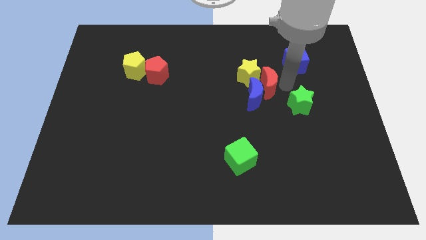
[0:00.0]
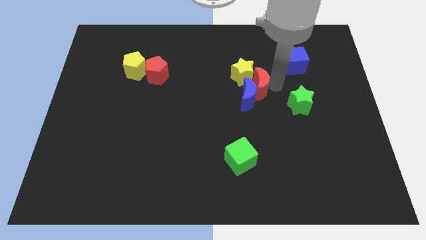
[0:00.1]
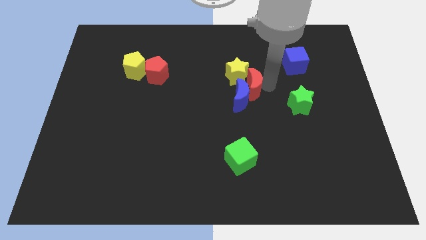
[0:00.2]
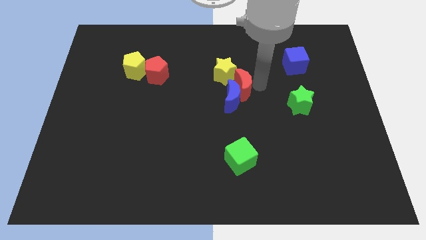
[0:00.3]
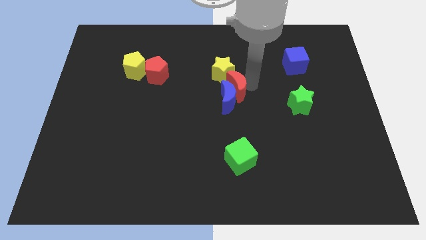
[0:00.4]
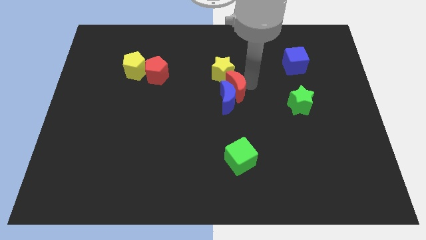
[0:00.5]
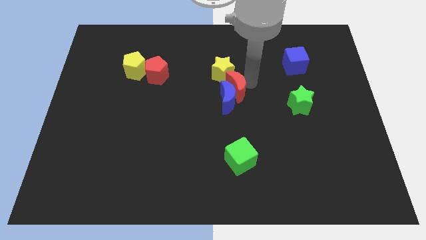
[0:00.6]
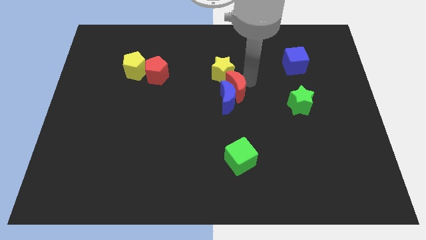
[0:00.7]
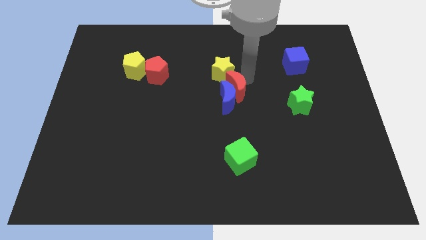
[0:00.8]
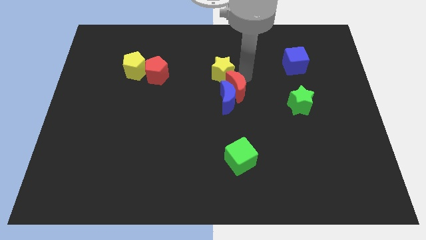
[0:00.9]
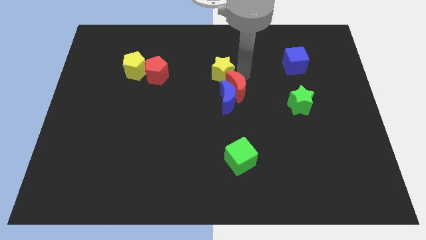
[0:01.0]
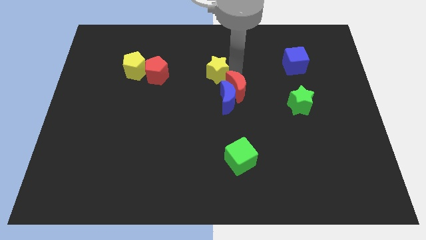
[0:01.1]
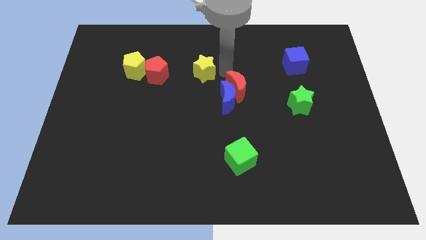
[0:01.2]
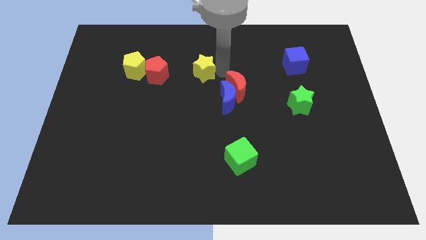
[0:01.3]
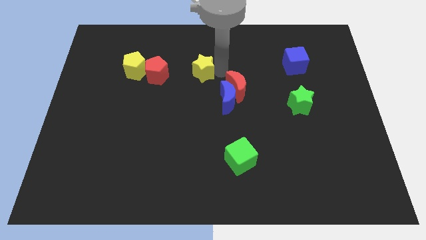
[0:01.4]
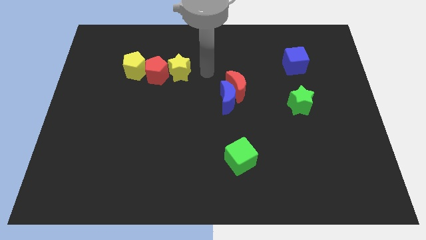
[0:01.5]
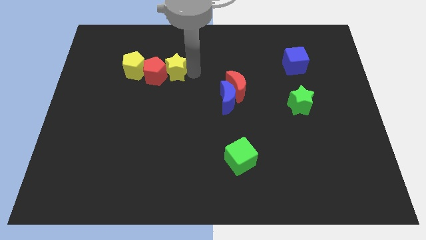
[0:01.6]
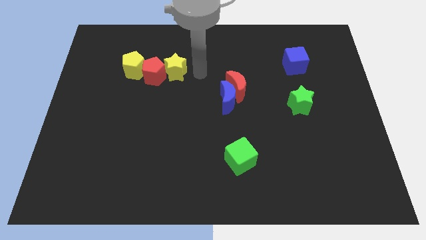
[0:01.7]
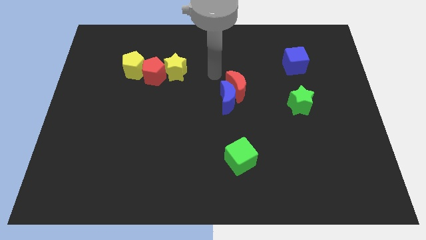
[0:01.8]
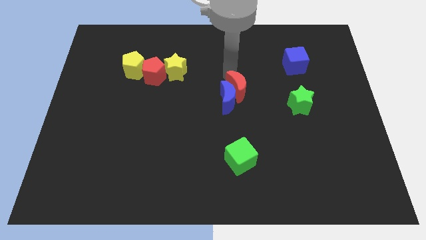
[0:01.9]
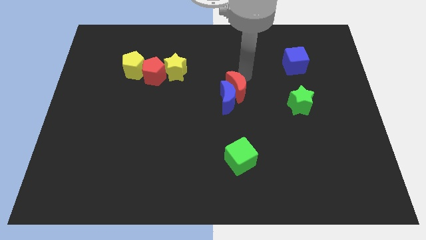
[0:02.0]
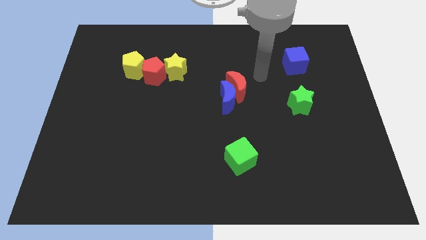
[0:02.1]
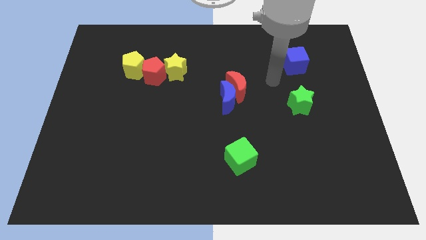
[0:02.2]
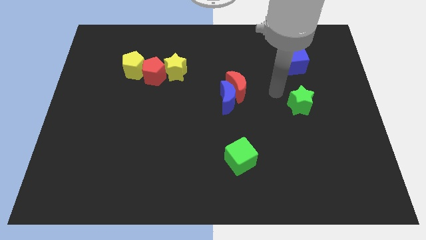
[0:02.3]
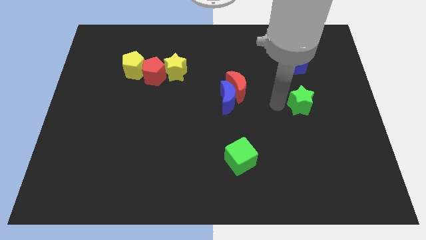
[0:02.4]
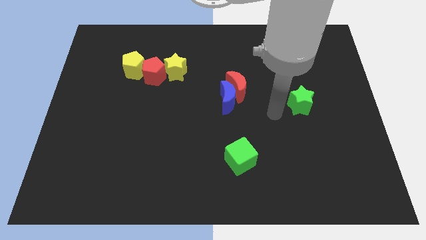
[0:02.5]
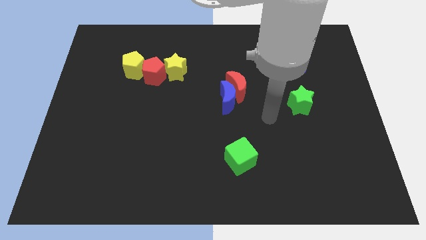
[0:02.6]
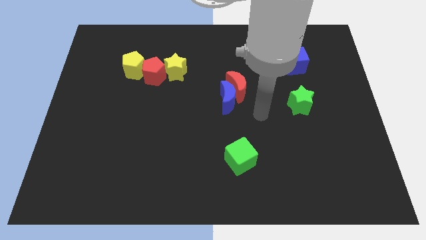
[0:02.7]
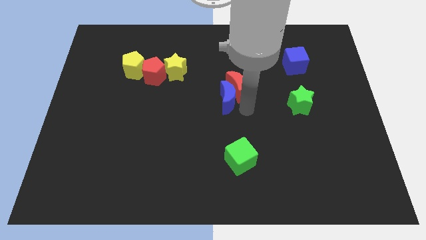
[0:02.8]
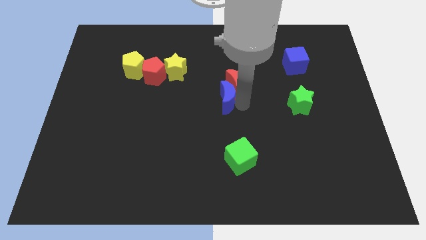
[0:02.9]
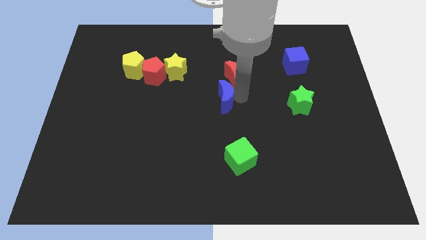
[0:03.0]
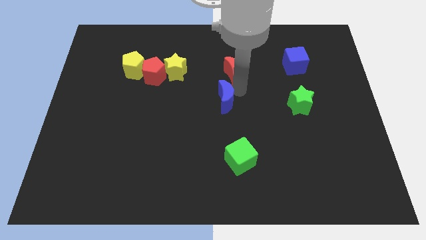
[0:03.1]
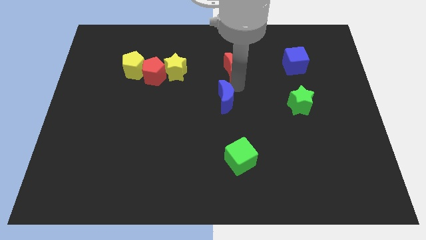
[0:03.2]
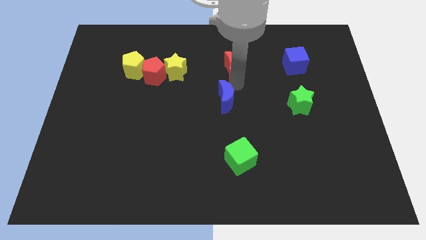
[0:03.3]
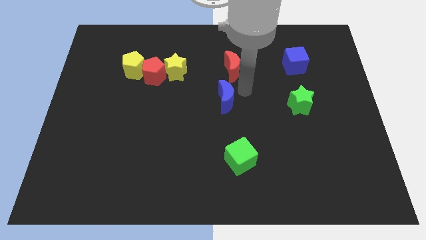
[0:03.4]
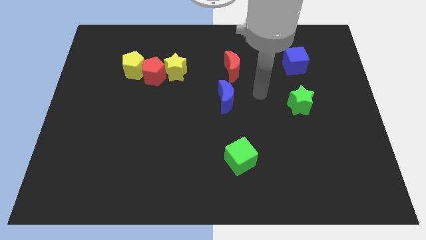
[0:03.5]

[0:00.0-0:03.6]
move the red moon left to the blue cube

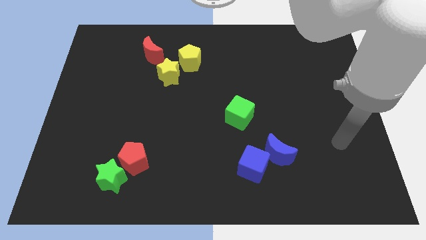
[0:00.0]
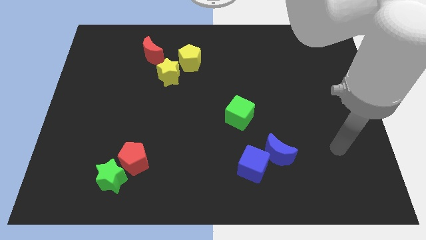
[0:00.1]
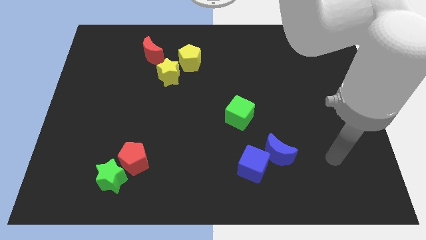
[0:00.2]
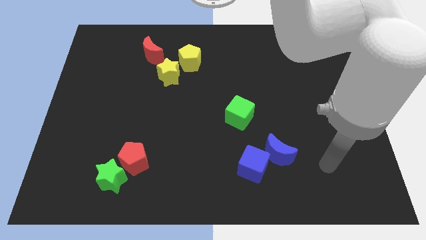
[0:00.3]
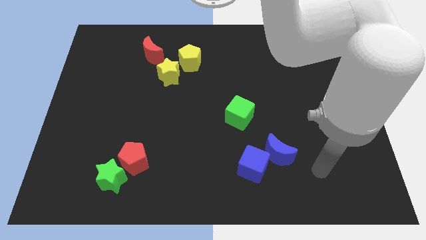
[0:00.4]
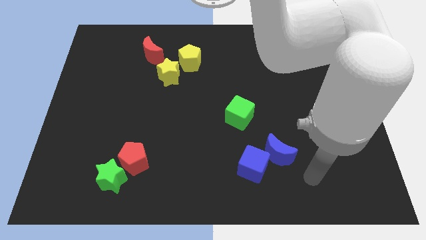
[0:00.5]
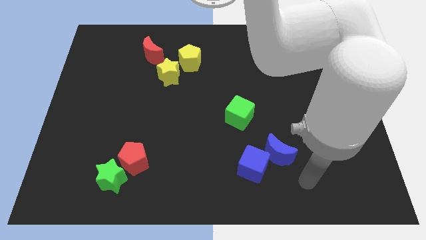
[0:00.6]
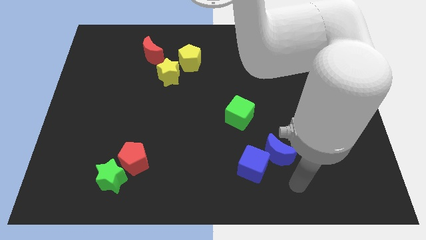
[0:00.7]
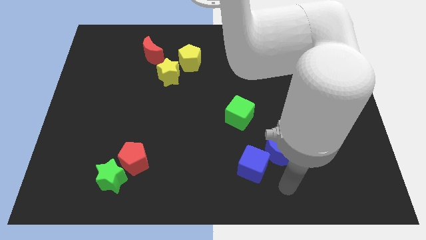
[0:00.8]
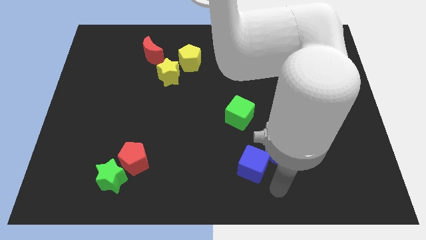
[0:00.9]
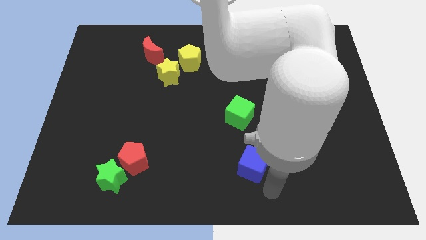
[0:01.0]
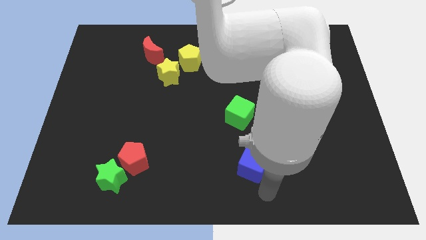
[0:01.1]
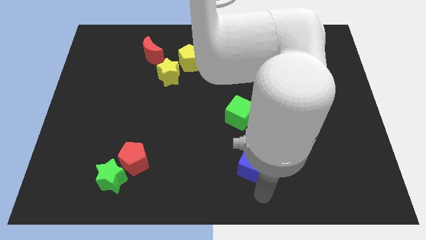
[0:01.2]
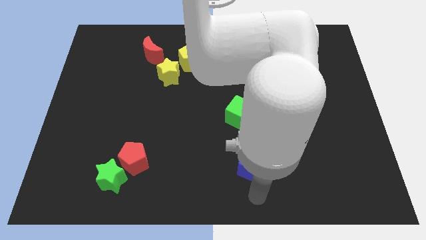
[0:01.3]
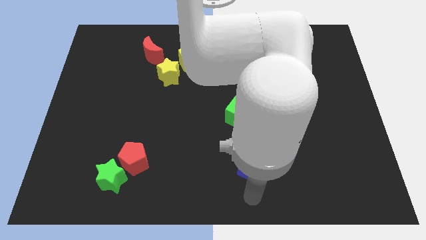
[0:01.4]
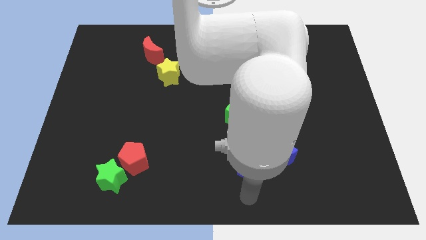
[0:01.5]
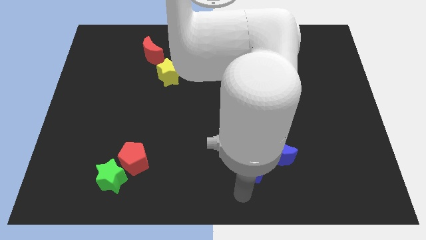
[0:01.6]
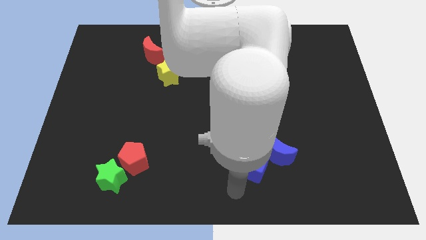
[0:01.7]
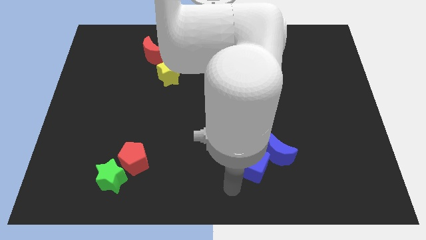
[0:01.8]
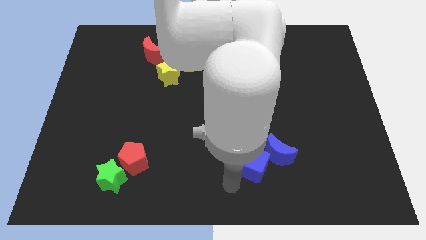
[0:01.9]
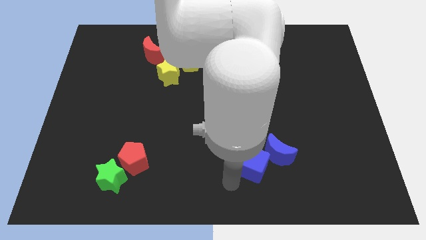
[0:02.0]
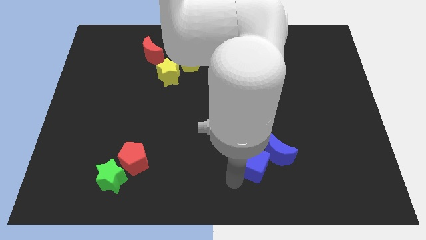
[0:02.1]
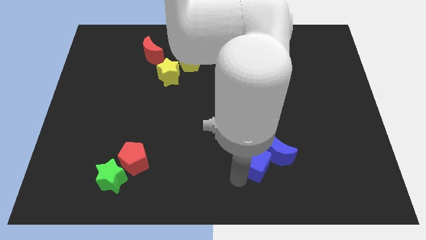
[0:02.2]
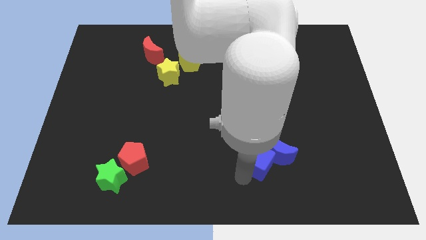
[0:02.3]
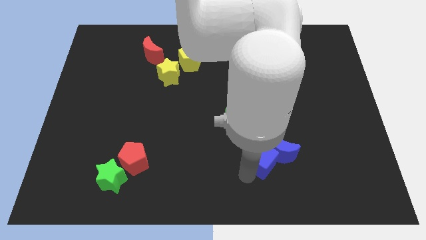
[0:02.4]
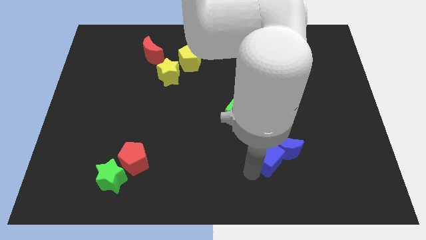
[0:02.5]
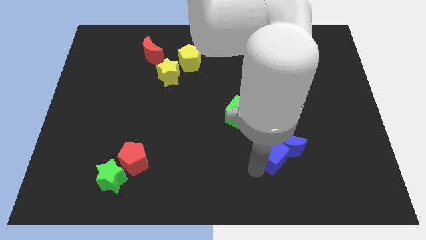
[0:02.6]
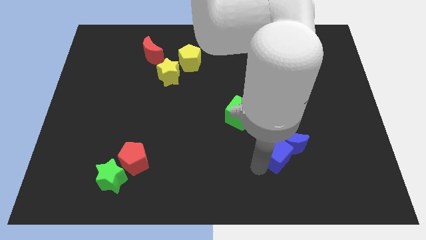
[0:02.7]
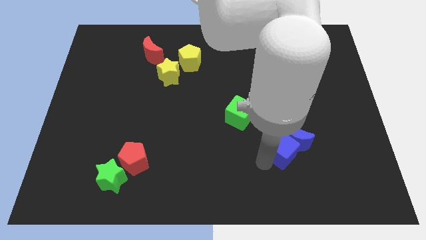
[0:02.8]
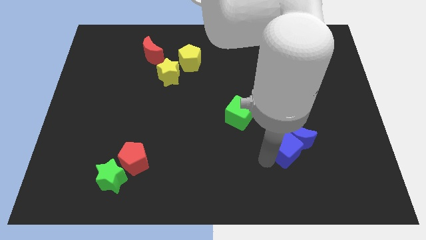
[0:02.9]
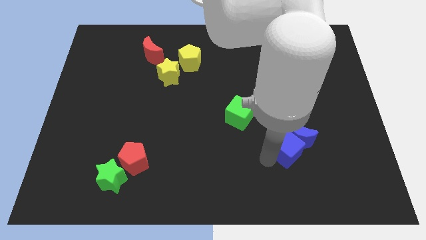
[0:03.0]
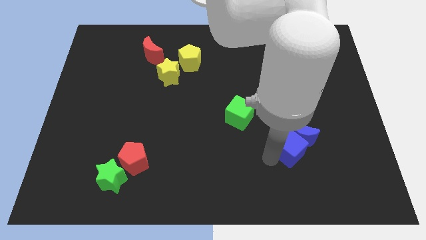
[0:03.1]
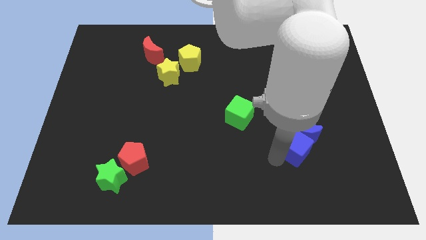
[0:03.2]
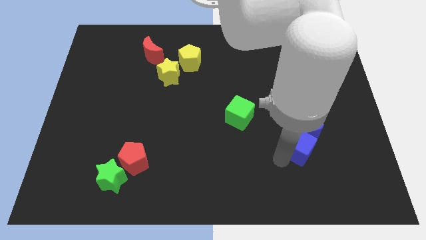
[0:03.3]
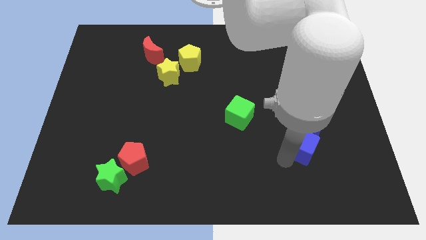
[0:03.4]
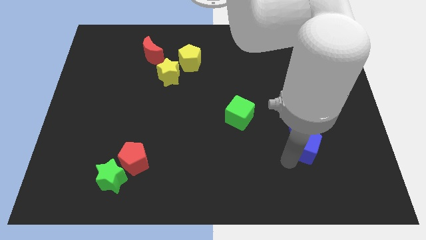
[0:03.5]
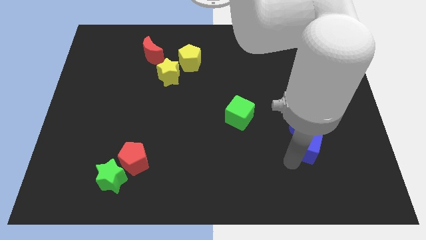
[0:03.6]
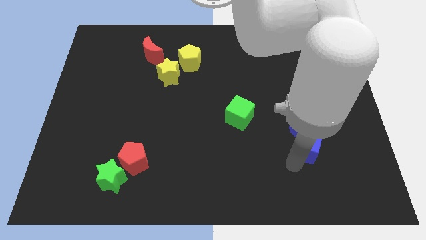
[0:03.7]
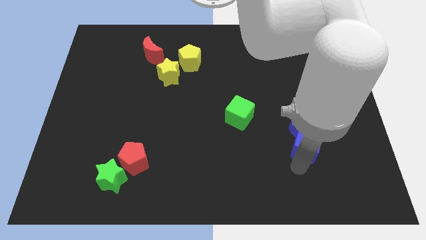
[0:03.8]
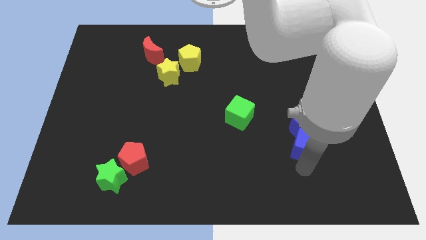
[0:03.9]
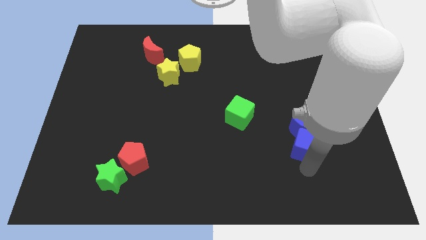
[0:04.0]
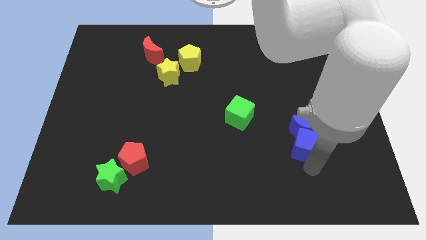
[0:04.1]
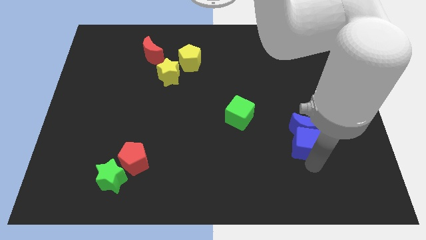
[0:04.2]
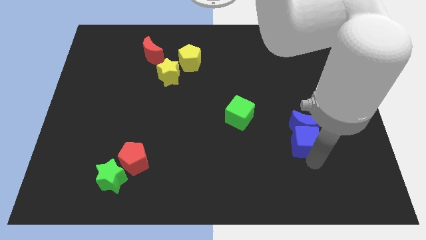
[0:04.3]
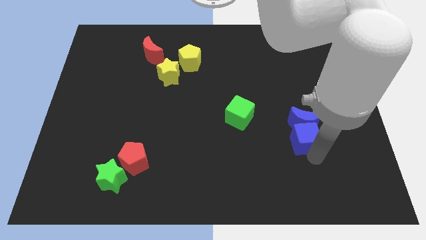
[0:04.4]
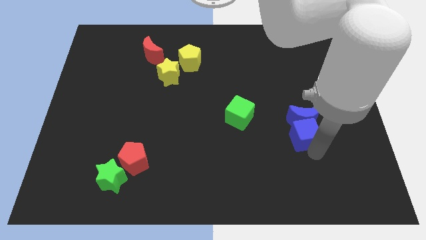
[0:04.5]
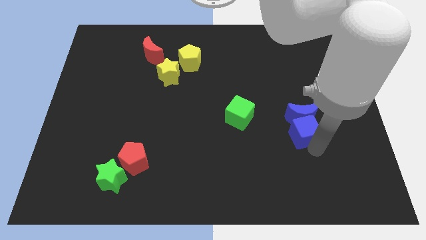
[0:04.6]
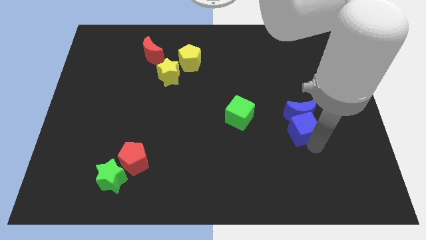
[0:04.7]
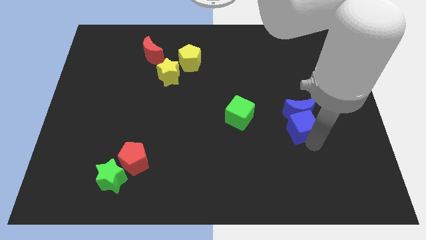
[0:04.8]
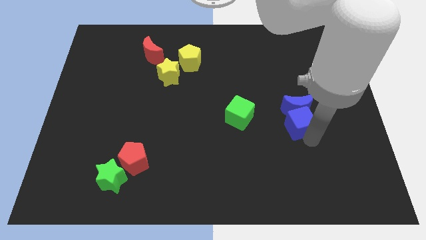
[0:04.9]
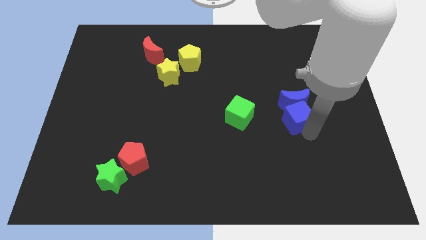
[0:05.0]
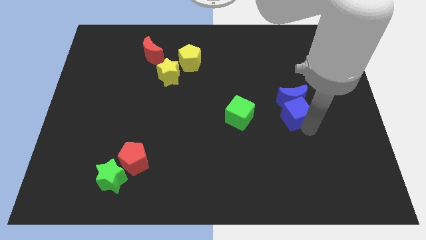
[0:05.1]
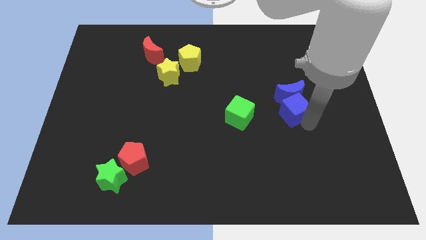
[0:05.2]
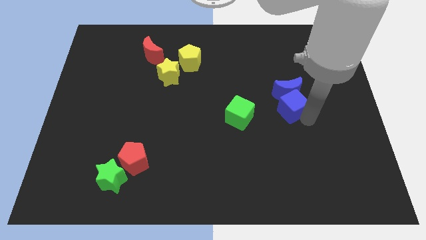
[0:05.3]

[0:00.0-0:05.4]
move the blue crescent and blue cube upwards of the board

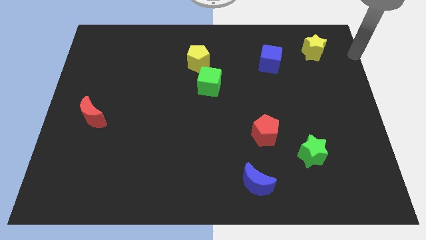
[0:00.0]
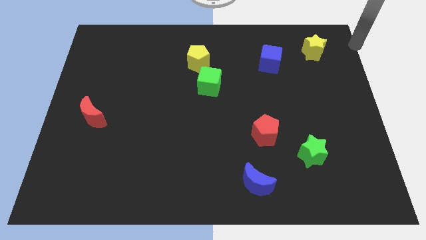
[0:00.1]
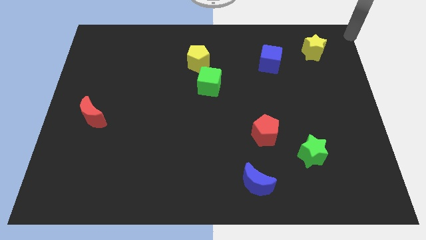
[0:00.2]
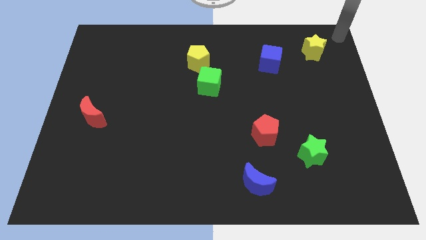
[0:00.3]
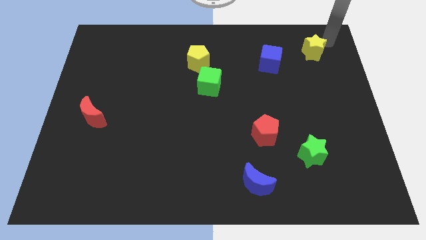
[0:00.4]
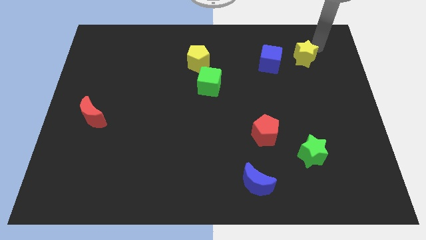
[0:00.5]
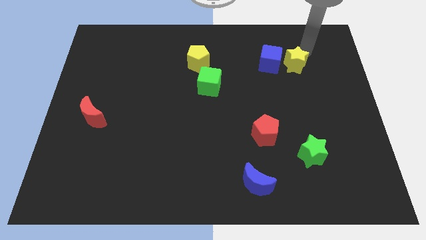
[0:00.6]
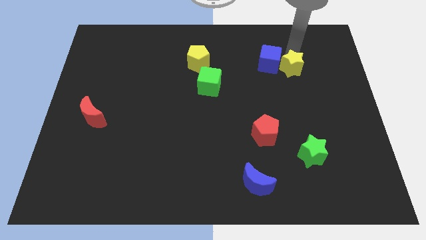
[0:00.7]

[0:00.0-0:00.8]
push the yellow star into blue cube
